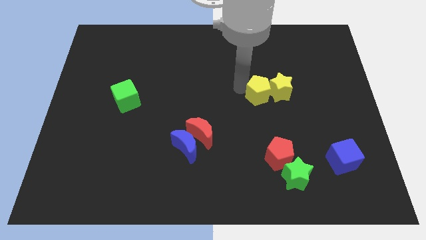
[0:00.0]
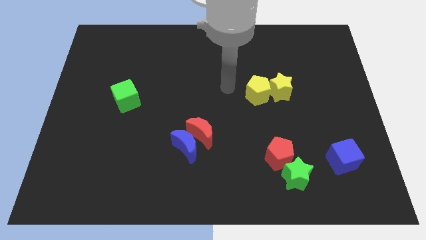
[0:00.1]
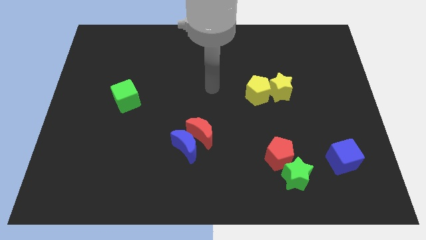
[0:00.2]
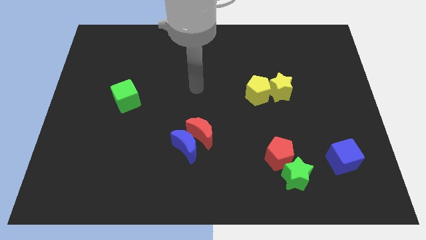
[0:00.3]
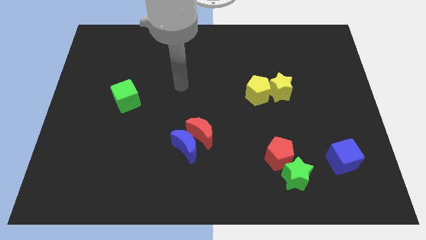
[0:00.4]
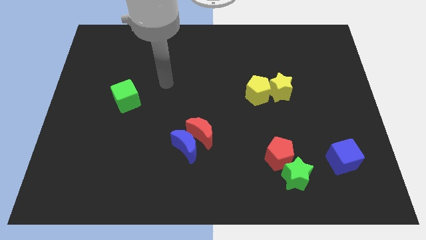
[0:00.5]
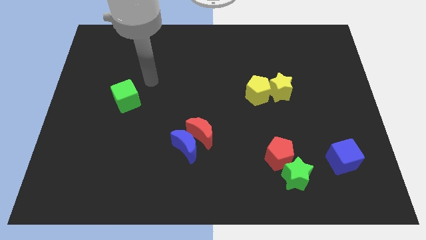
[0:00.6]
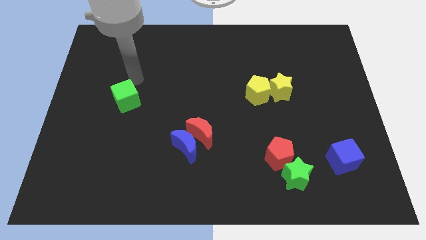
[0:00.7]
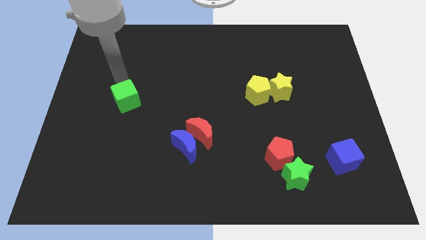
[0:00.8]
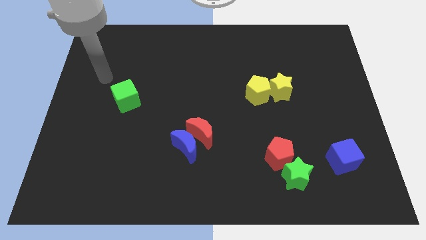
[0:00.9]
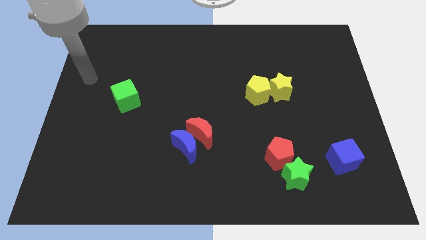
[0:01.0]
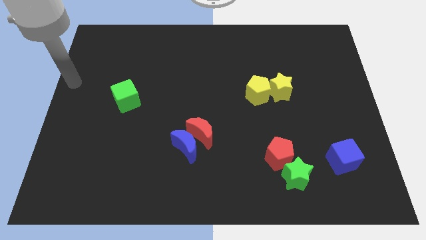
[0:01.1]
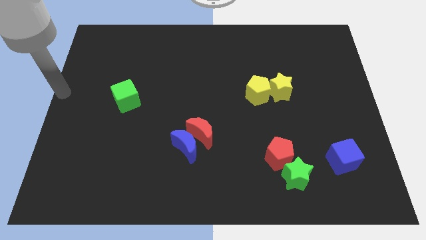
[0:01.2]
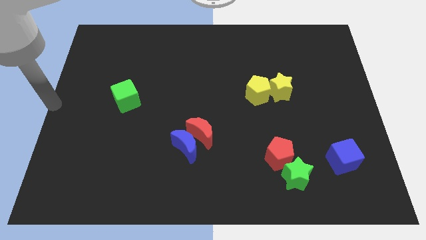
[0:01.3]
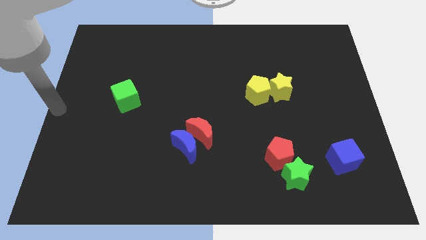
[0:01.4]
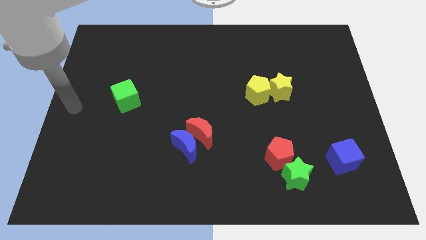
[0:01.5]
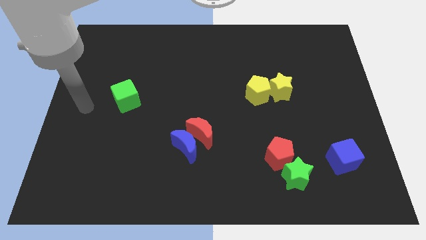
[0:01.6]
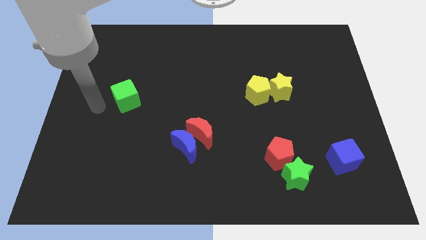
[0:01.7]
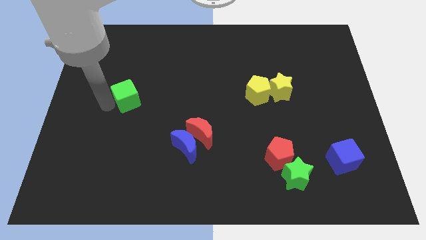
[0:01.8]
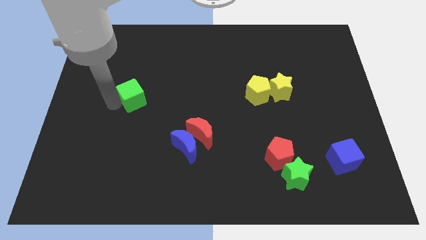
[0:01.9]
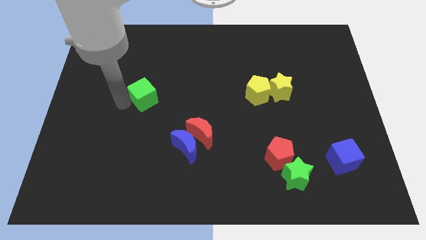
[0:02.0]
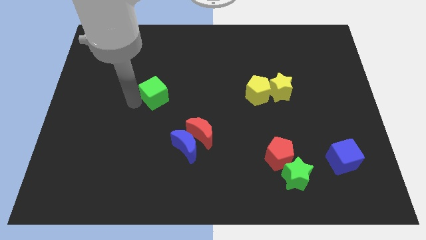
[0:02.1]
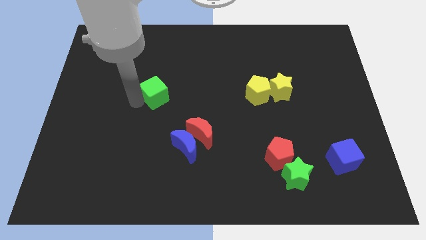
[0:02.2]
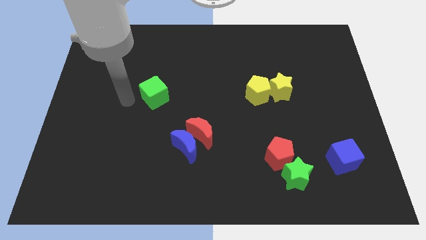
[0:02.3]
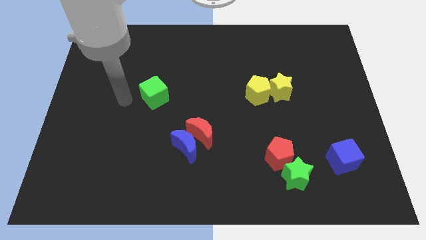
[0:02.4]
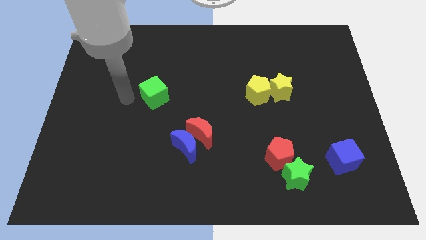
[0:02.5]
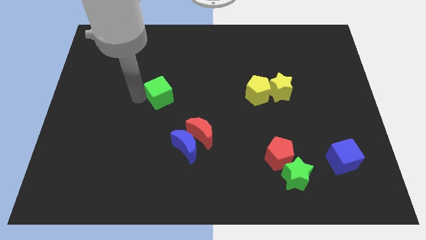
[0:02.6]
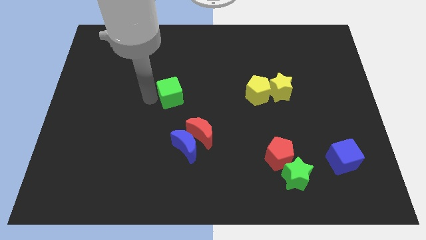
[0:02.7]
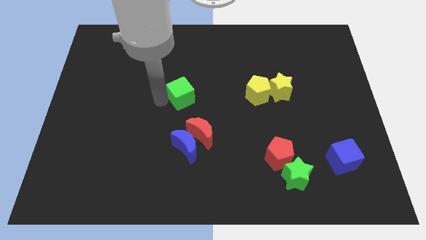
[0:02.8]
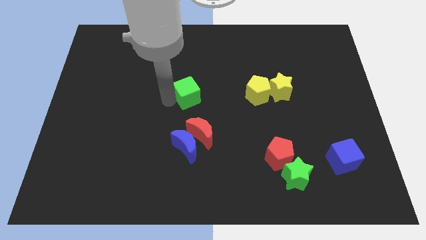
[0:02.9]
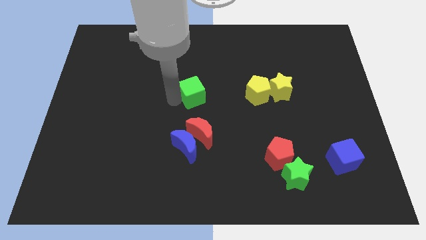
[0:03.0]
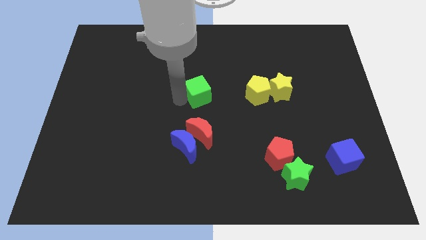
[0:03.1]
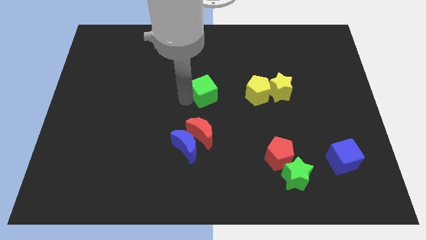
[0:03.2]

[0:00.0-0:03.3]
push the green cube parallel to yellow pentagon

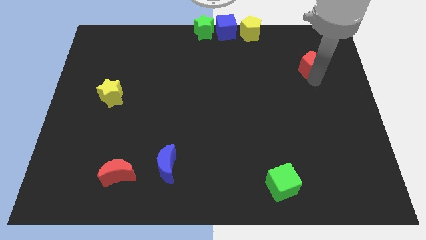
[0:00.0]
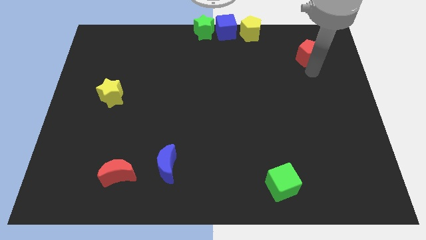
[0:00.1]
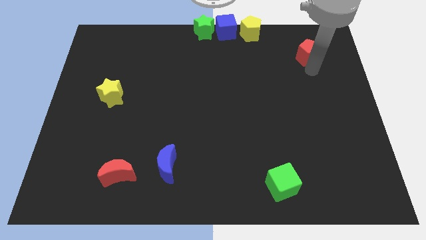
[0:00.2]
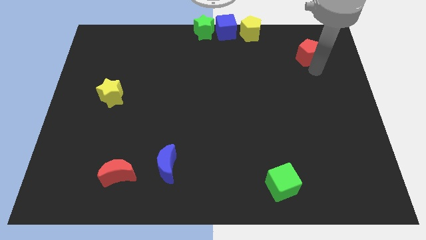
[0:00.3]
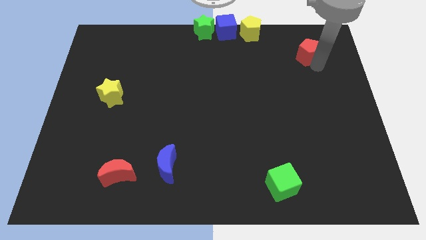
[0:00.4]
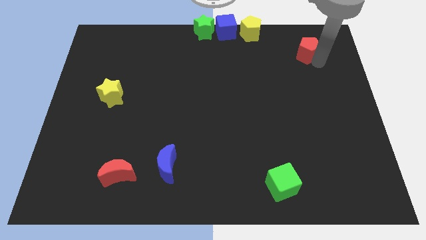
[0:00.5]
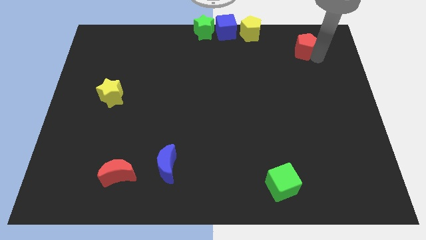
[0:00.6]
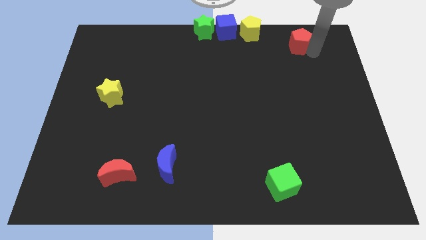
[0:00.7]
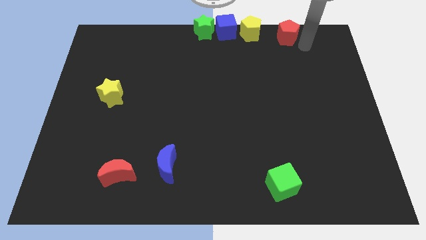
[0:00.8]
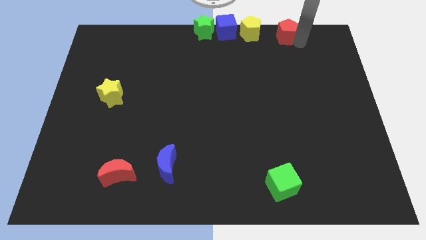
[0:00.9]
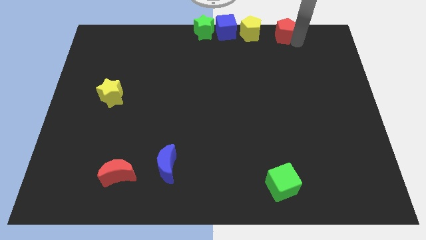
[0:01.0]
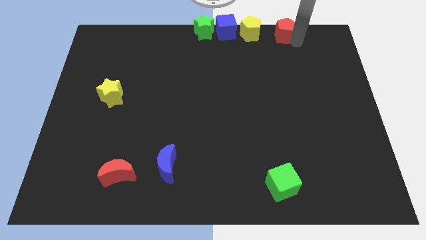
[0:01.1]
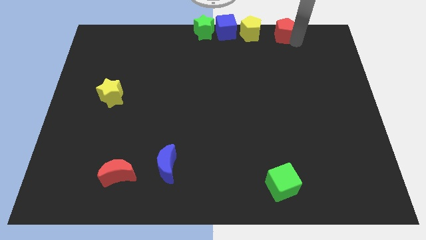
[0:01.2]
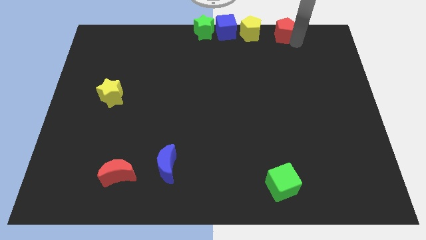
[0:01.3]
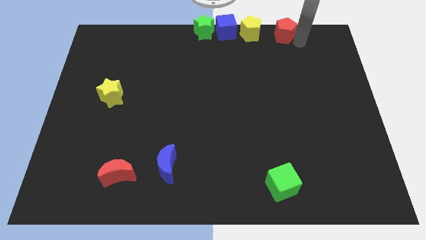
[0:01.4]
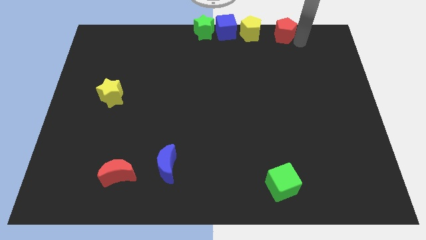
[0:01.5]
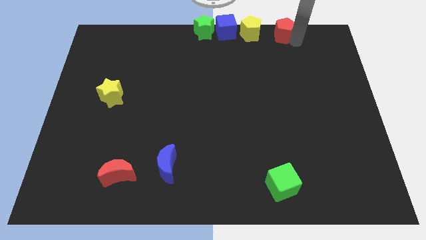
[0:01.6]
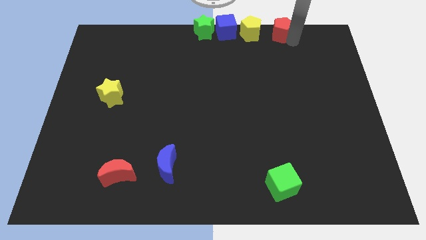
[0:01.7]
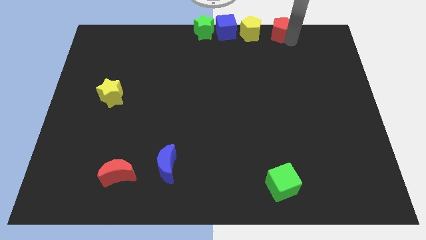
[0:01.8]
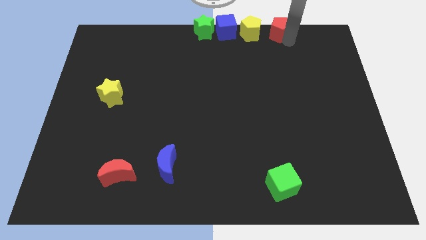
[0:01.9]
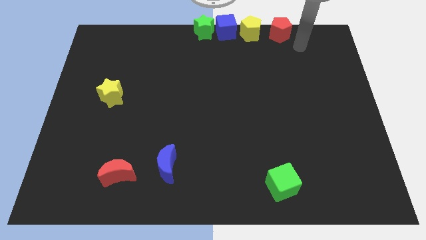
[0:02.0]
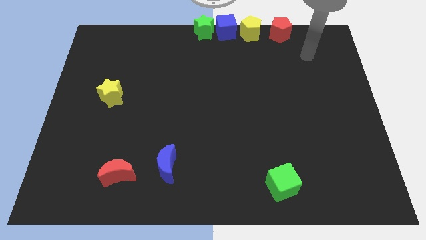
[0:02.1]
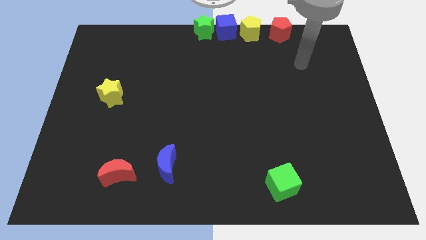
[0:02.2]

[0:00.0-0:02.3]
move the red pentagon to the right side of the yellow pentagon

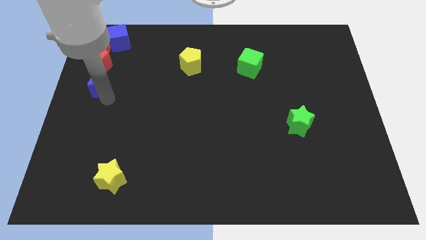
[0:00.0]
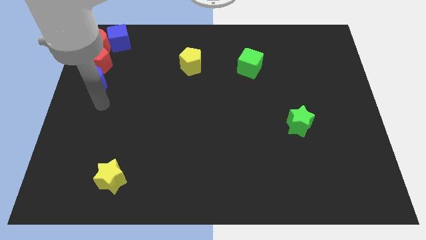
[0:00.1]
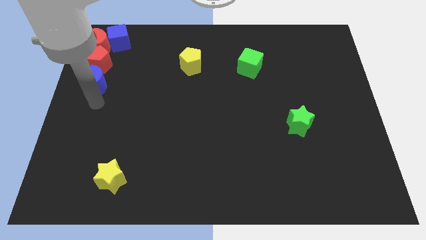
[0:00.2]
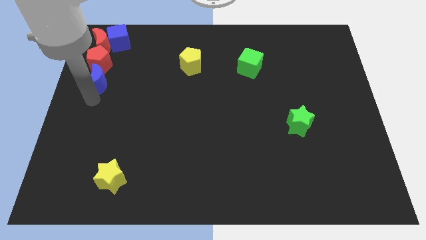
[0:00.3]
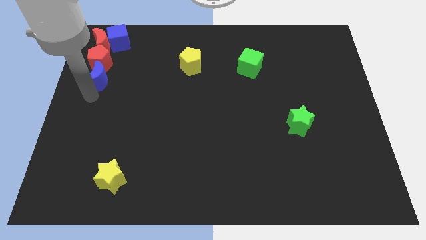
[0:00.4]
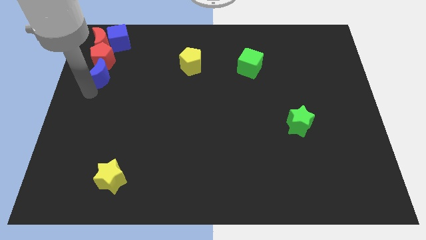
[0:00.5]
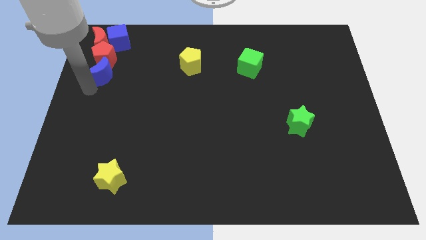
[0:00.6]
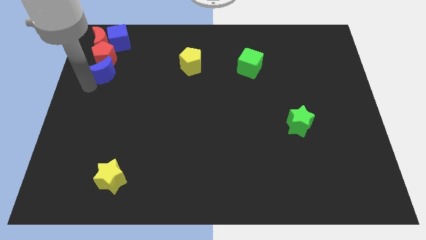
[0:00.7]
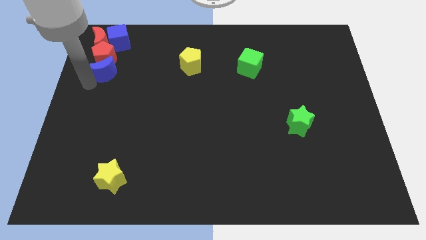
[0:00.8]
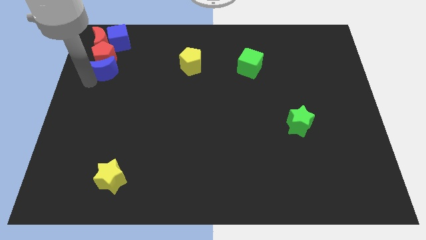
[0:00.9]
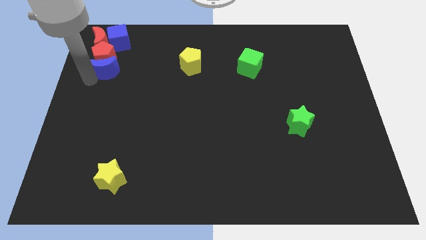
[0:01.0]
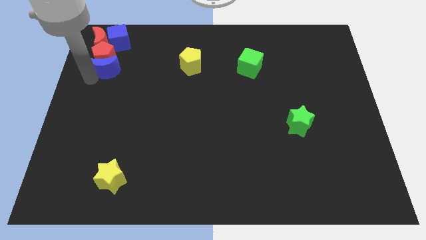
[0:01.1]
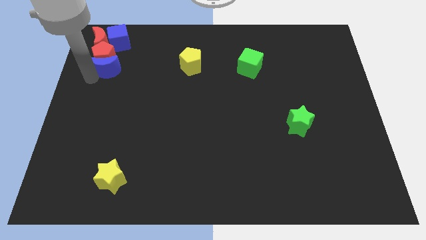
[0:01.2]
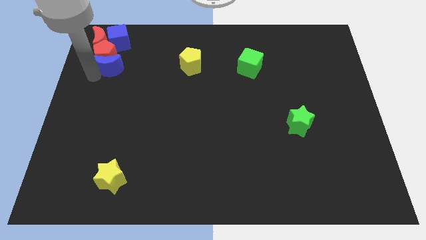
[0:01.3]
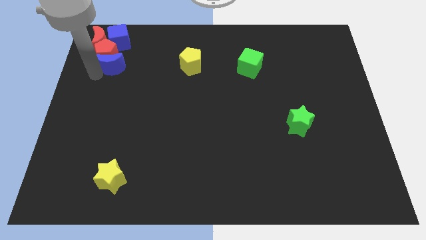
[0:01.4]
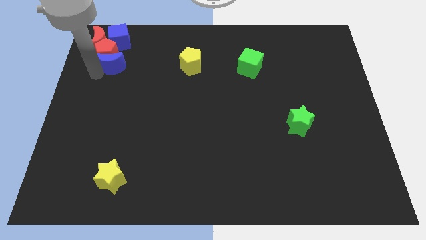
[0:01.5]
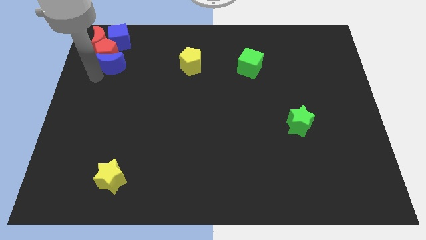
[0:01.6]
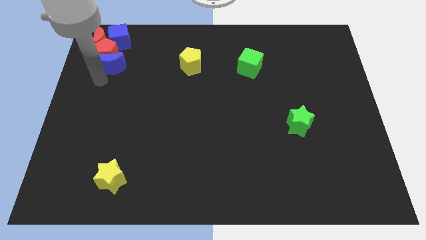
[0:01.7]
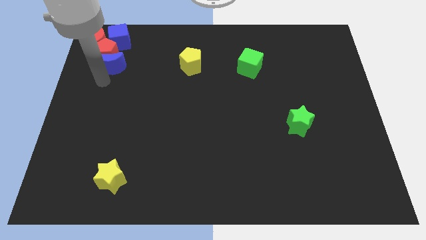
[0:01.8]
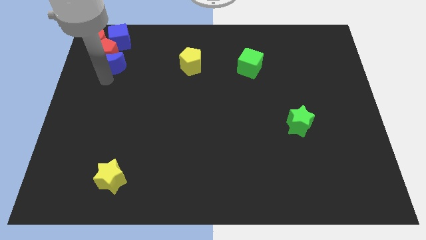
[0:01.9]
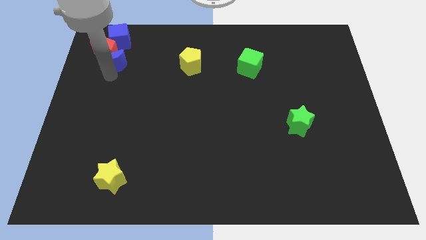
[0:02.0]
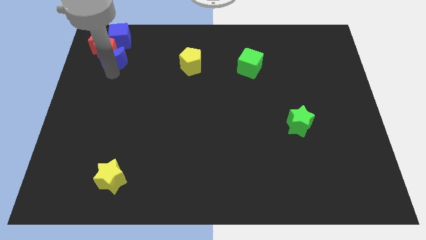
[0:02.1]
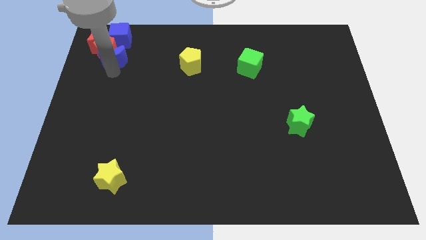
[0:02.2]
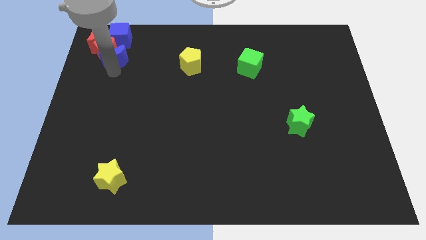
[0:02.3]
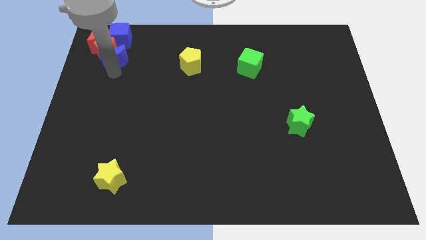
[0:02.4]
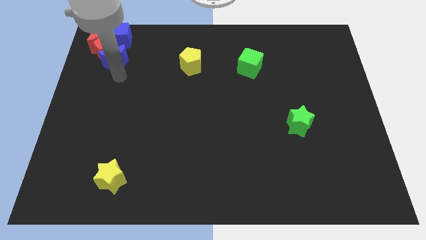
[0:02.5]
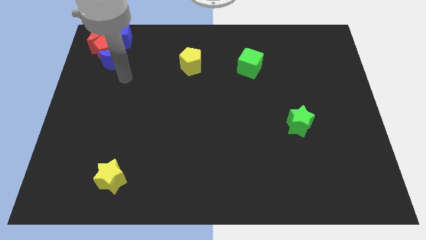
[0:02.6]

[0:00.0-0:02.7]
push the blue crescent in to the red pentagon

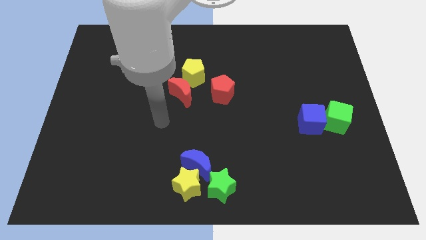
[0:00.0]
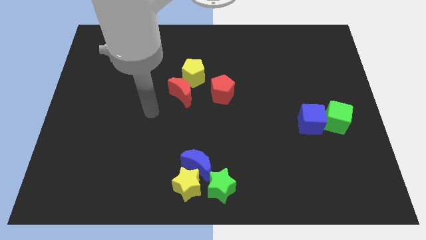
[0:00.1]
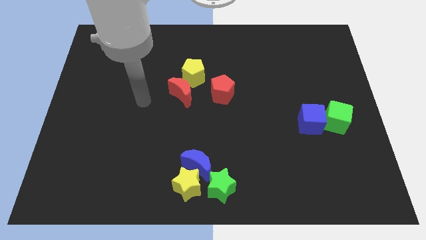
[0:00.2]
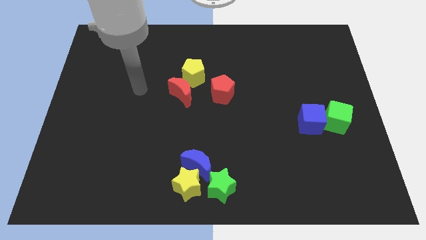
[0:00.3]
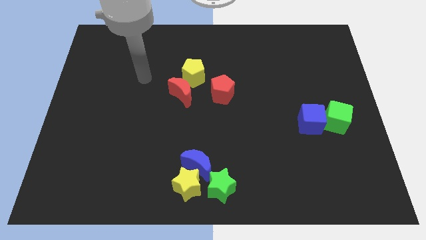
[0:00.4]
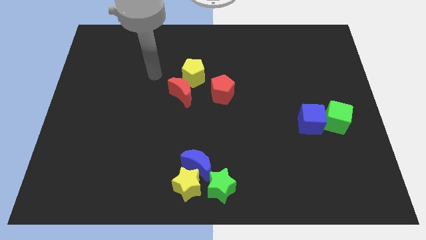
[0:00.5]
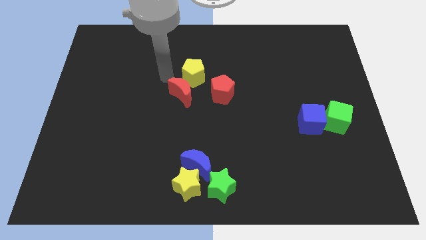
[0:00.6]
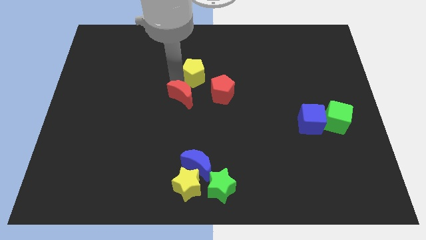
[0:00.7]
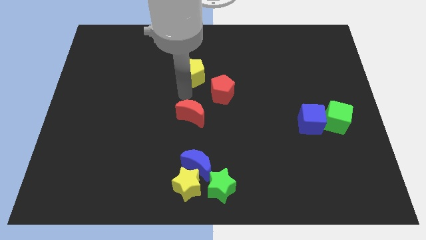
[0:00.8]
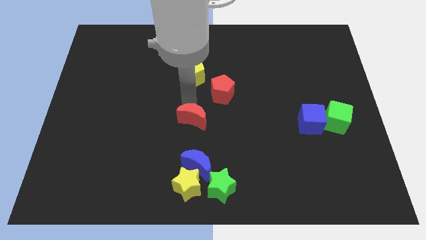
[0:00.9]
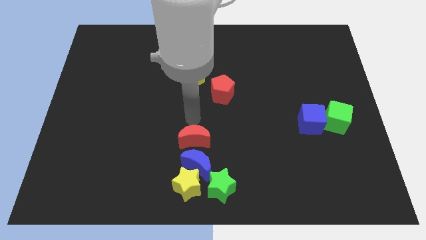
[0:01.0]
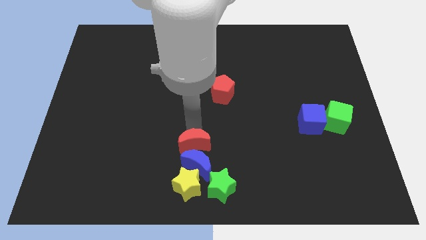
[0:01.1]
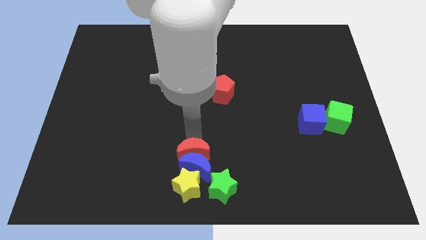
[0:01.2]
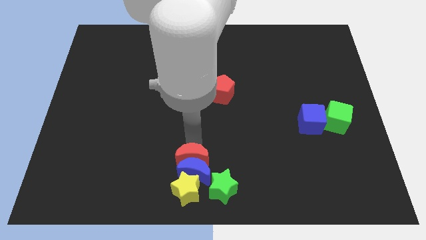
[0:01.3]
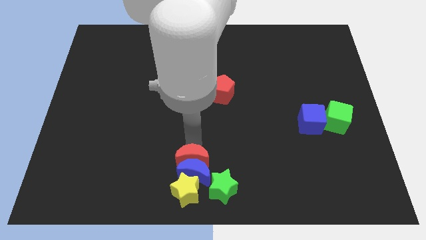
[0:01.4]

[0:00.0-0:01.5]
move the red moon into the blue crescent
